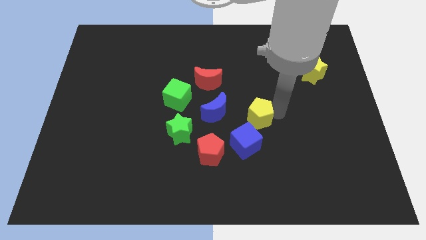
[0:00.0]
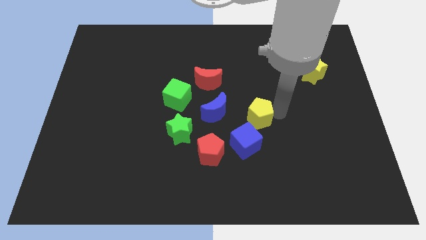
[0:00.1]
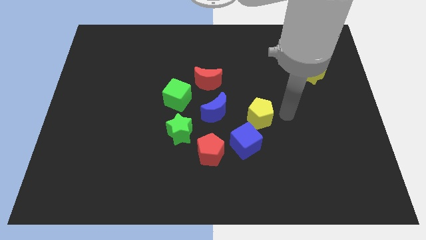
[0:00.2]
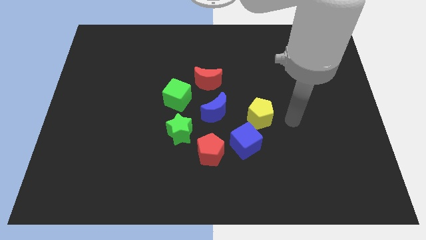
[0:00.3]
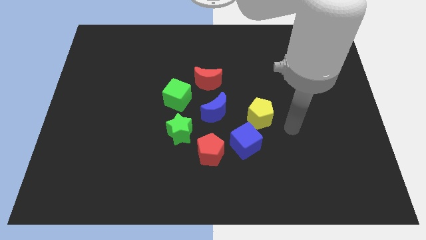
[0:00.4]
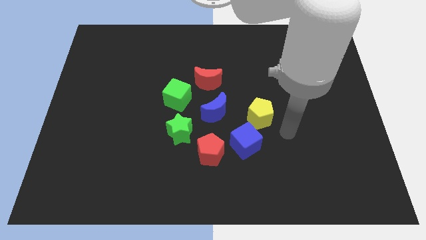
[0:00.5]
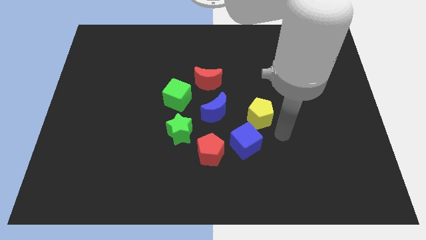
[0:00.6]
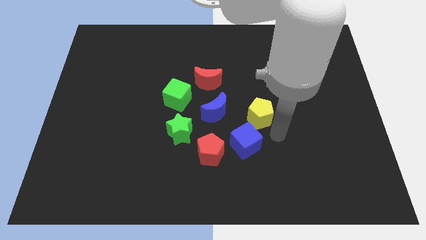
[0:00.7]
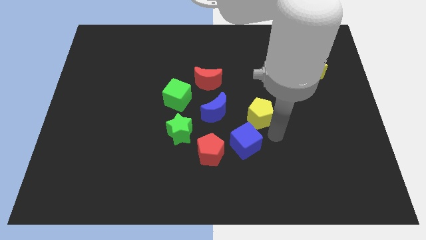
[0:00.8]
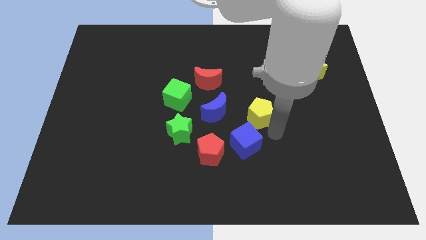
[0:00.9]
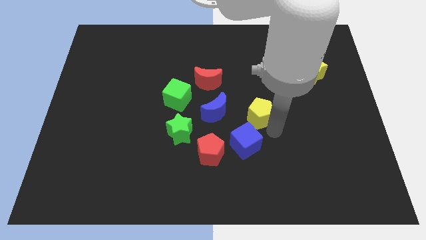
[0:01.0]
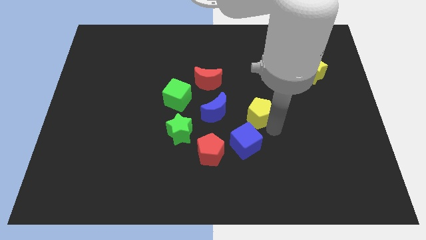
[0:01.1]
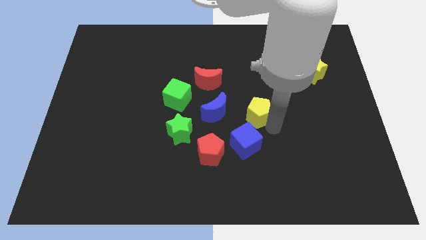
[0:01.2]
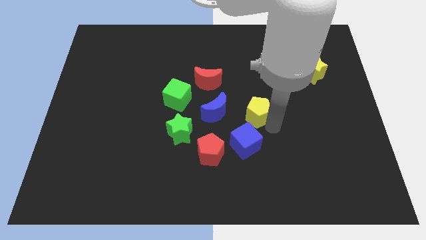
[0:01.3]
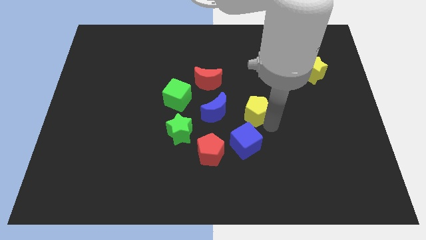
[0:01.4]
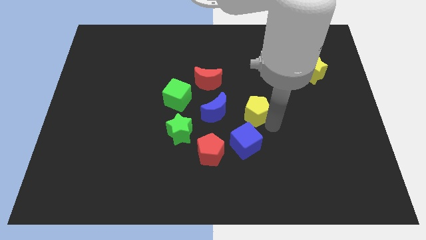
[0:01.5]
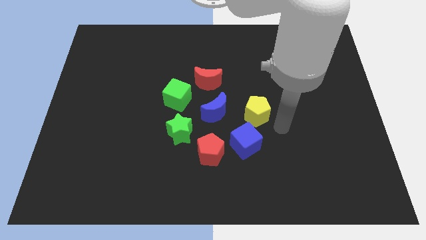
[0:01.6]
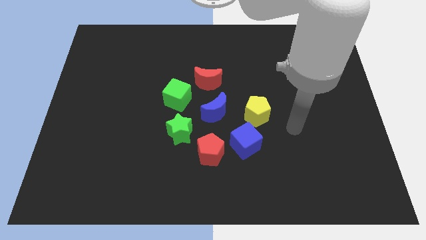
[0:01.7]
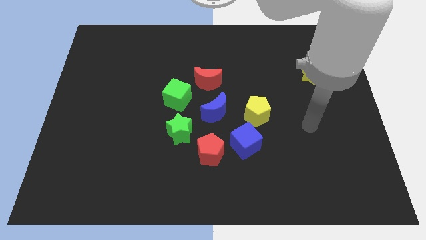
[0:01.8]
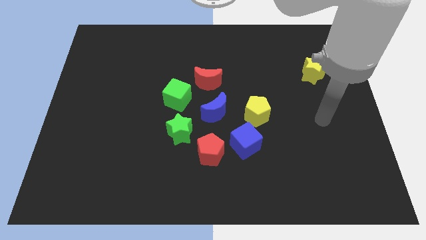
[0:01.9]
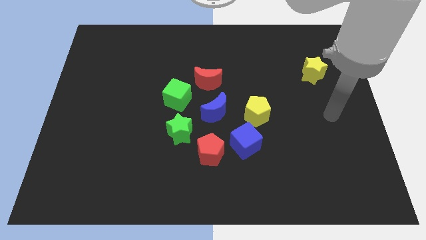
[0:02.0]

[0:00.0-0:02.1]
place yellow pentagon to the top right of blue cube

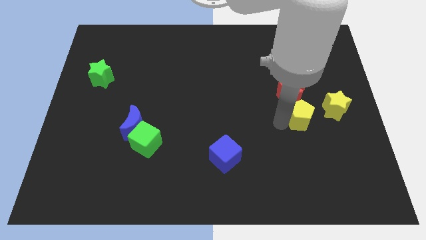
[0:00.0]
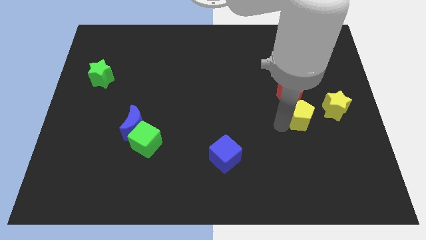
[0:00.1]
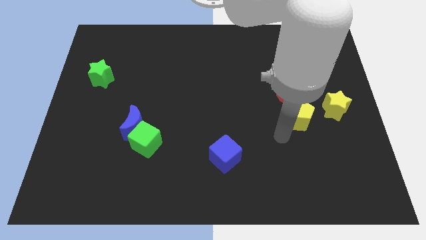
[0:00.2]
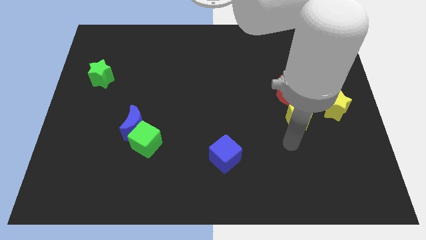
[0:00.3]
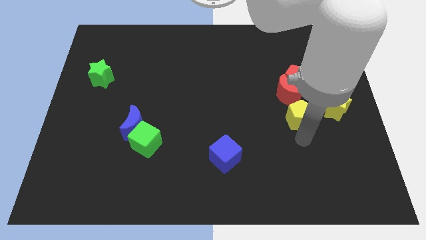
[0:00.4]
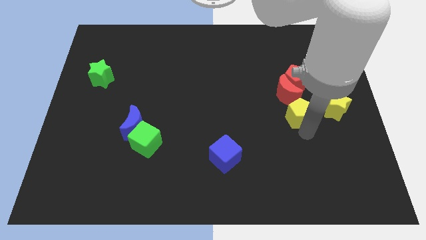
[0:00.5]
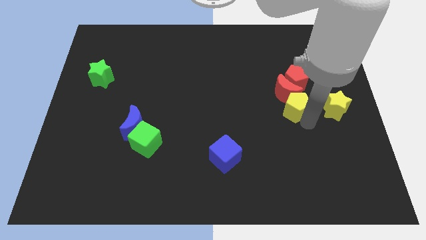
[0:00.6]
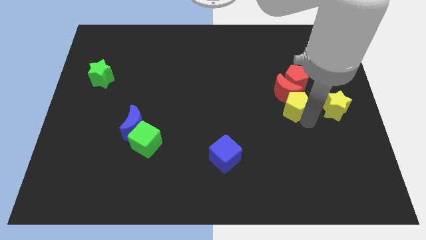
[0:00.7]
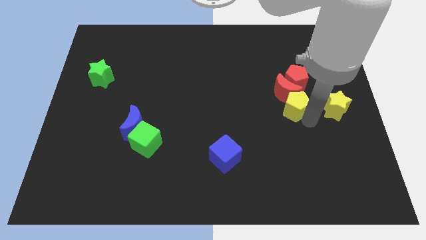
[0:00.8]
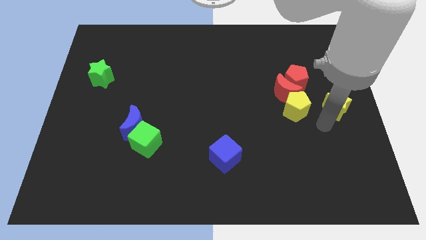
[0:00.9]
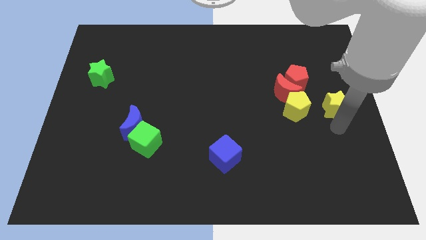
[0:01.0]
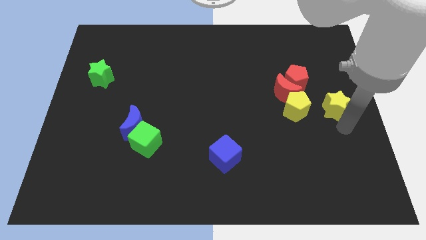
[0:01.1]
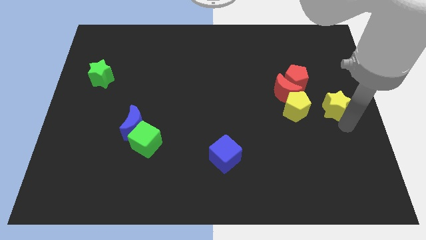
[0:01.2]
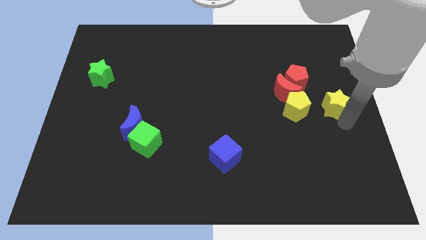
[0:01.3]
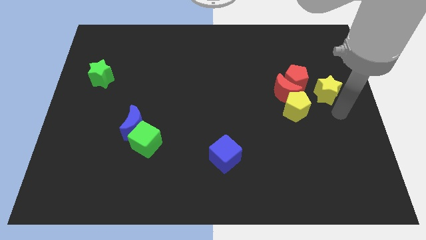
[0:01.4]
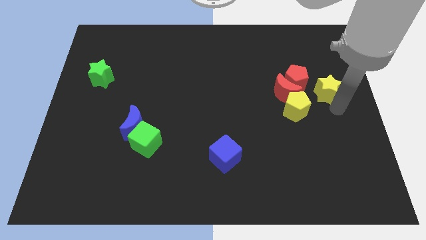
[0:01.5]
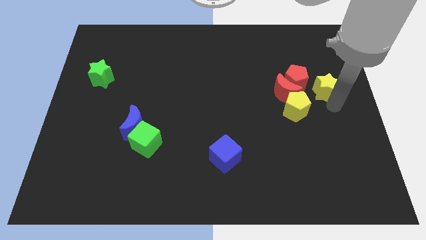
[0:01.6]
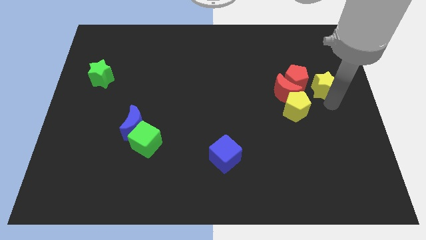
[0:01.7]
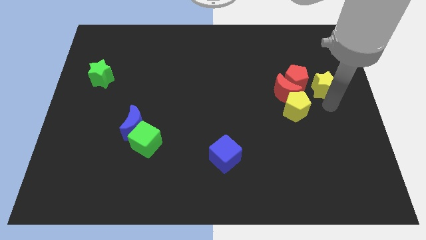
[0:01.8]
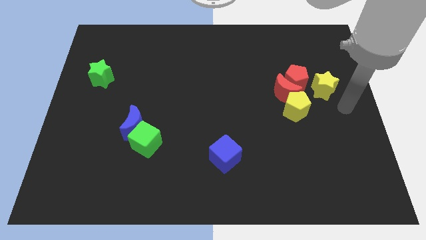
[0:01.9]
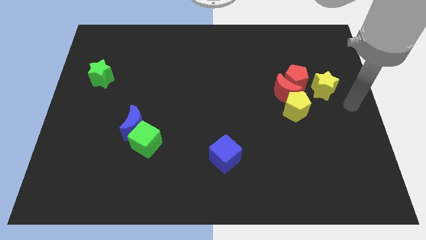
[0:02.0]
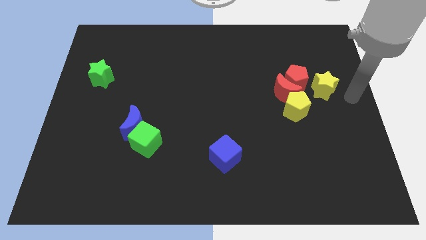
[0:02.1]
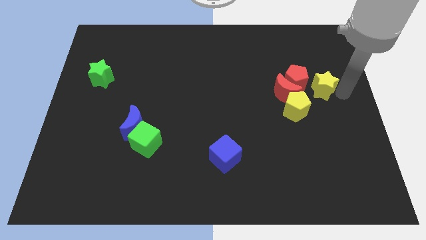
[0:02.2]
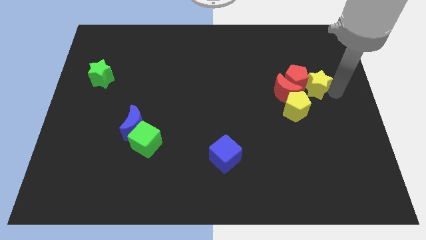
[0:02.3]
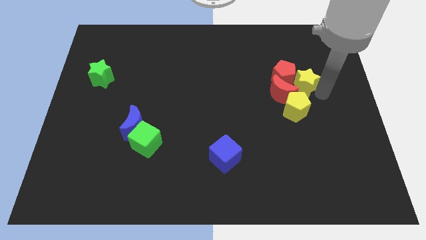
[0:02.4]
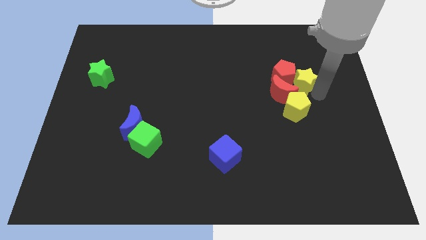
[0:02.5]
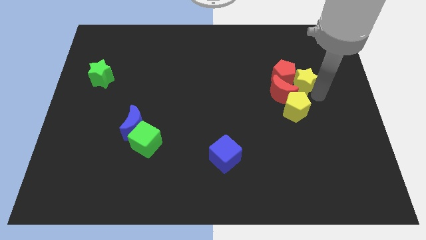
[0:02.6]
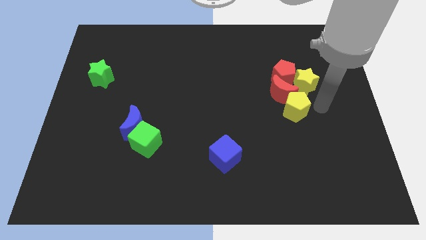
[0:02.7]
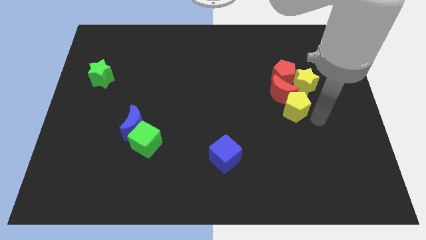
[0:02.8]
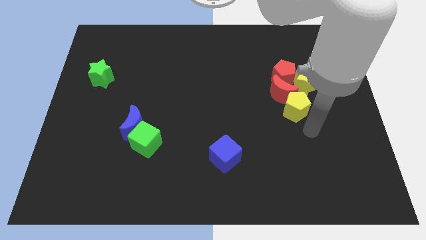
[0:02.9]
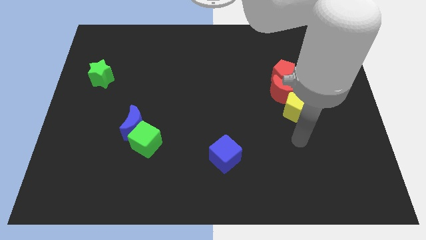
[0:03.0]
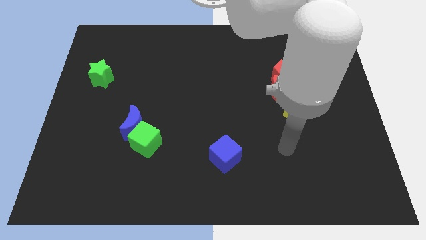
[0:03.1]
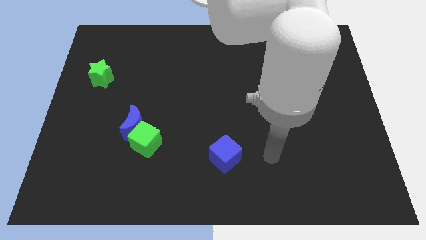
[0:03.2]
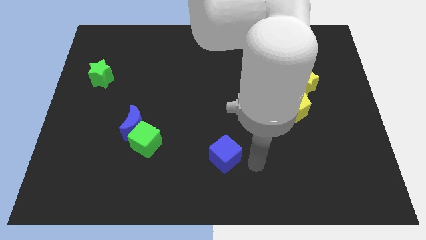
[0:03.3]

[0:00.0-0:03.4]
move the yellow blocks to the right of the red blocks

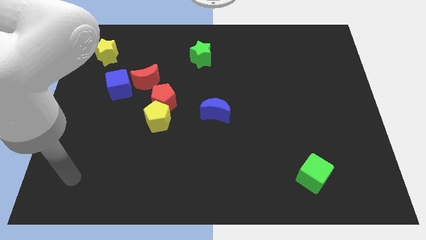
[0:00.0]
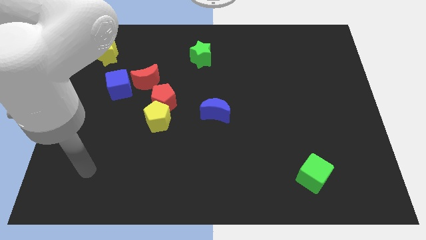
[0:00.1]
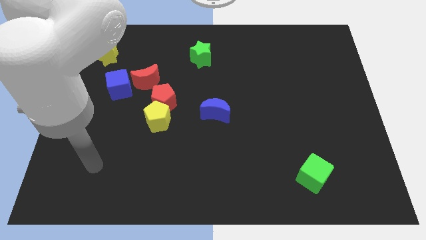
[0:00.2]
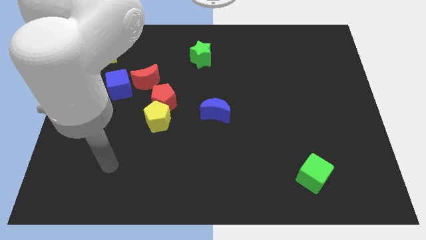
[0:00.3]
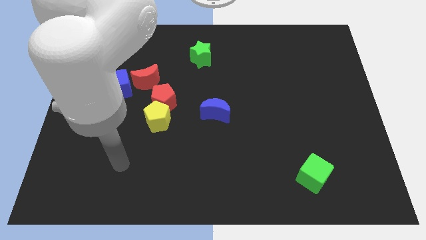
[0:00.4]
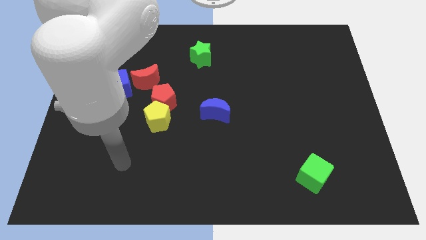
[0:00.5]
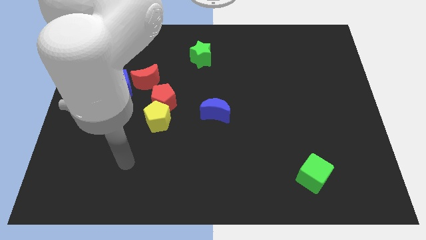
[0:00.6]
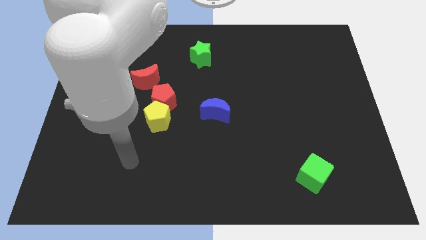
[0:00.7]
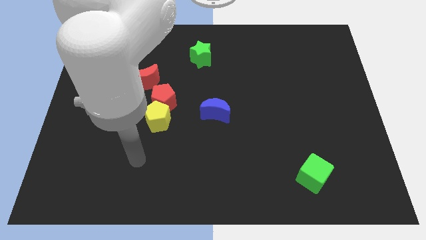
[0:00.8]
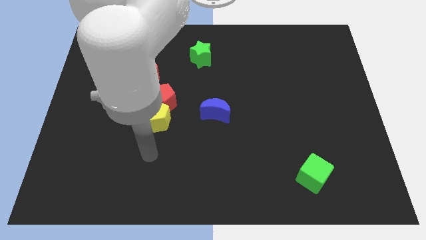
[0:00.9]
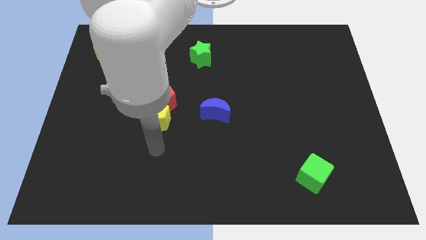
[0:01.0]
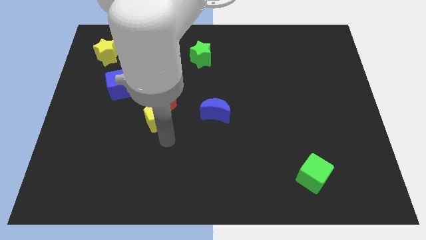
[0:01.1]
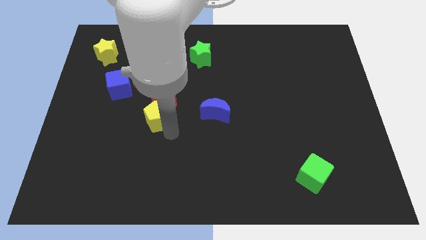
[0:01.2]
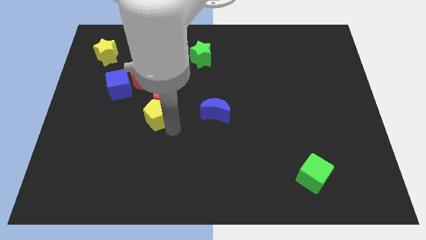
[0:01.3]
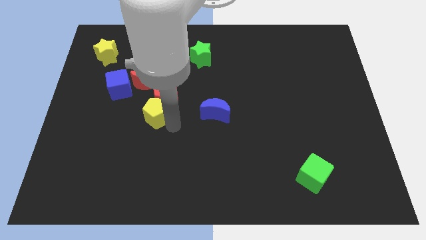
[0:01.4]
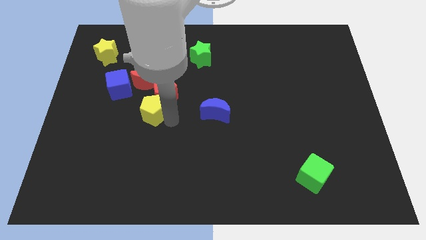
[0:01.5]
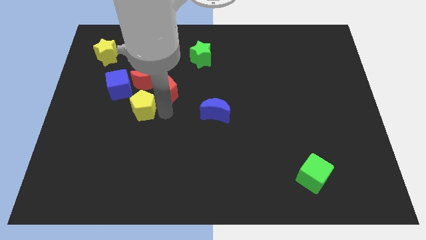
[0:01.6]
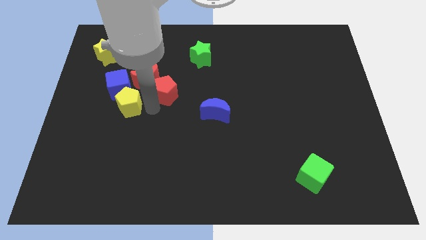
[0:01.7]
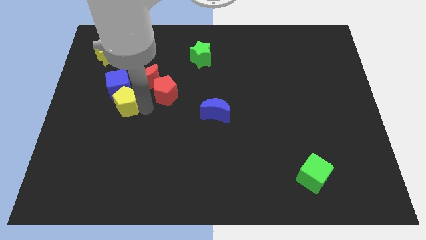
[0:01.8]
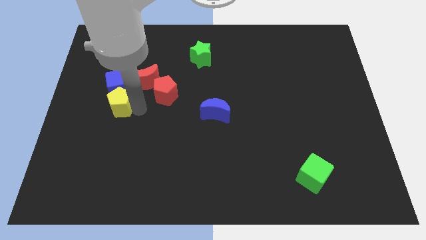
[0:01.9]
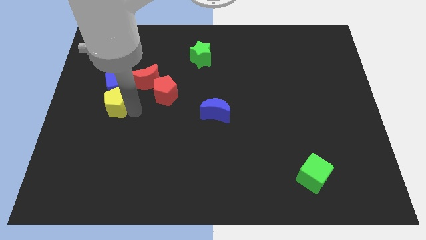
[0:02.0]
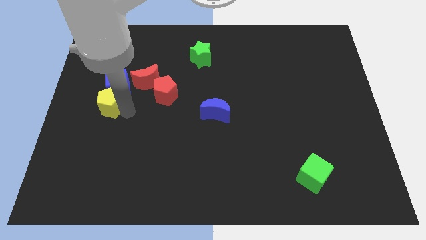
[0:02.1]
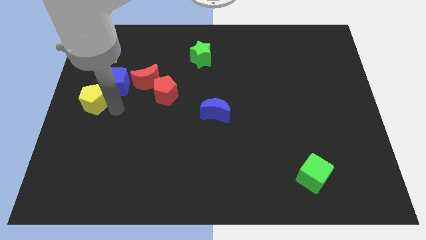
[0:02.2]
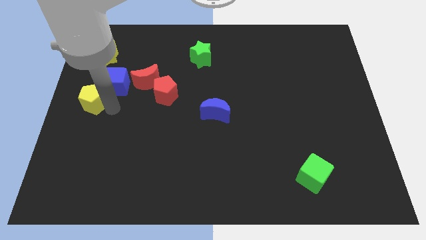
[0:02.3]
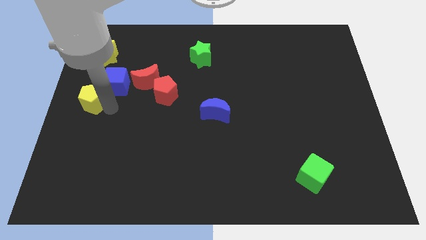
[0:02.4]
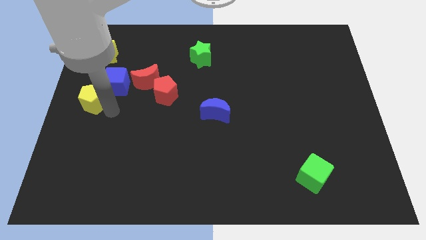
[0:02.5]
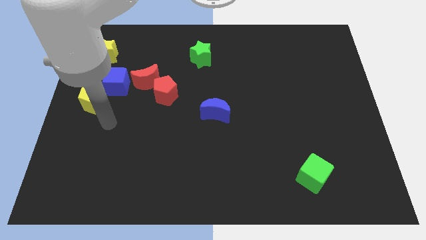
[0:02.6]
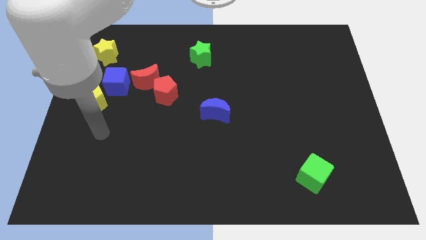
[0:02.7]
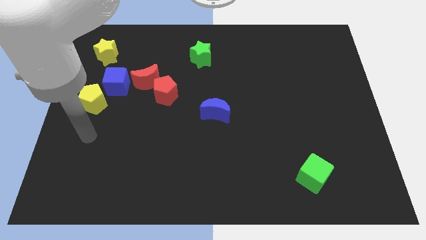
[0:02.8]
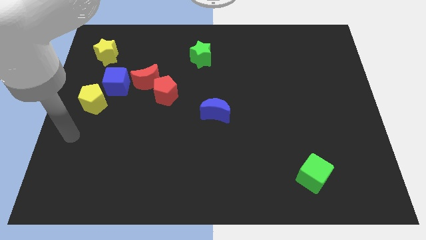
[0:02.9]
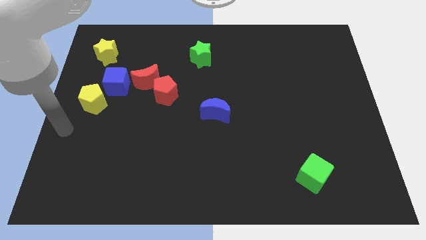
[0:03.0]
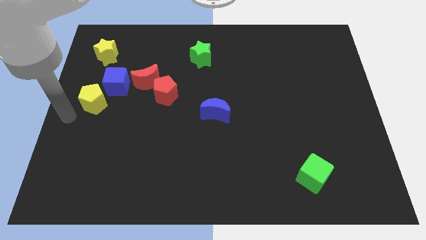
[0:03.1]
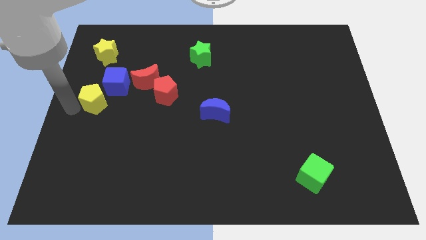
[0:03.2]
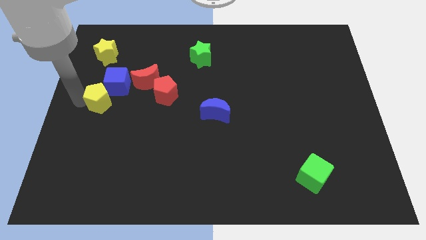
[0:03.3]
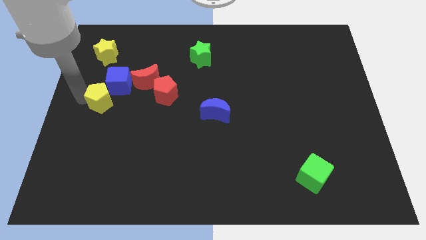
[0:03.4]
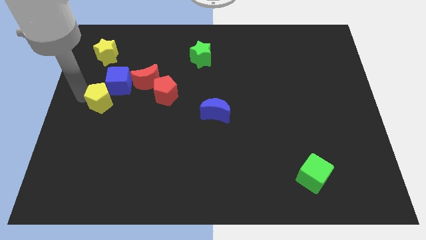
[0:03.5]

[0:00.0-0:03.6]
slide the yellow pentagon into the blue cube

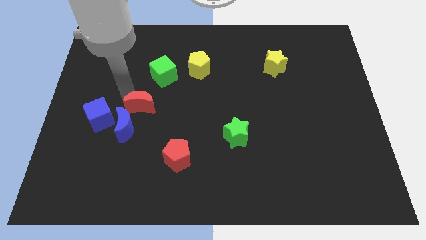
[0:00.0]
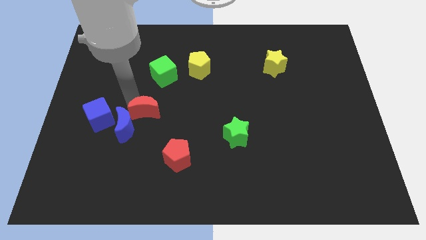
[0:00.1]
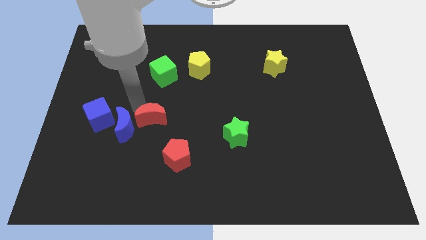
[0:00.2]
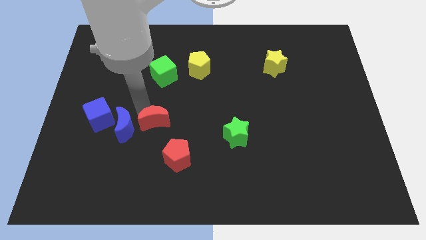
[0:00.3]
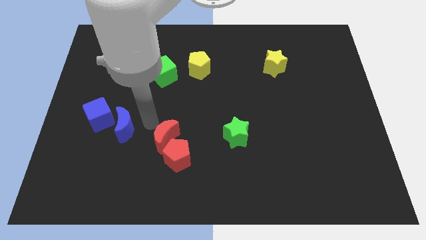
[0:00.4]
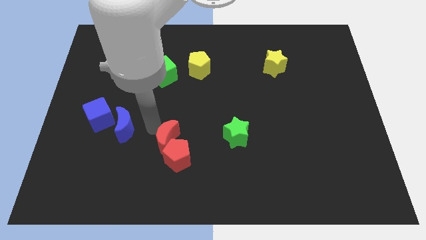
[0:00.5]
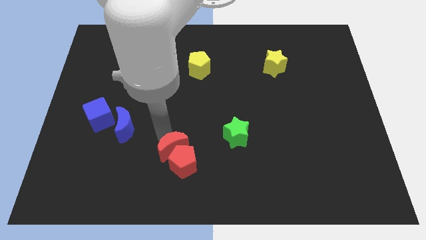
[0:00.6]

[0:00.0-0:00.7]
move the red crescent into the red pentagon
